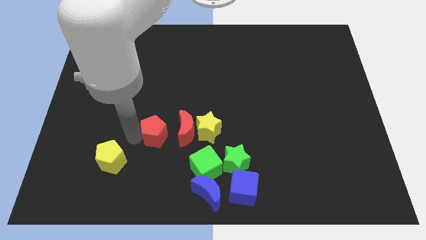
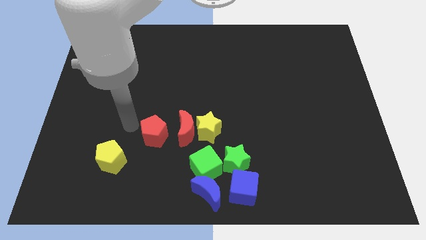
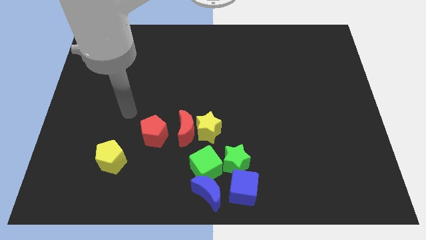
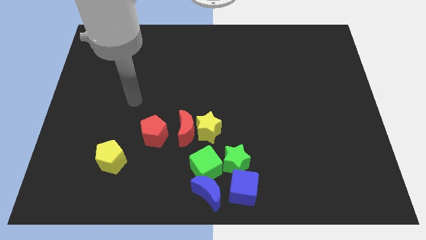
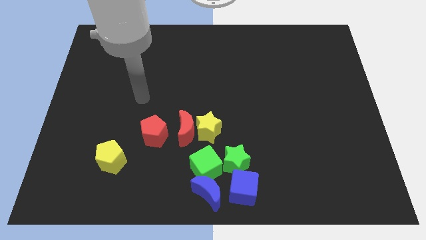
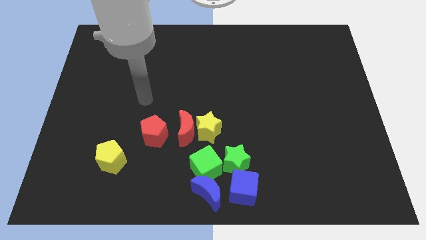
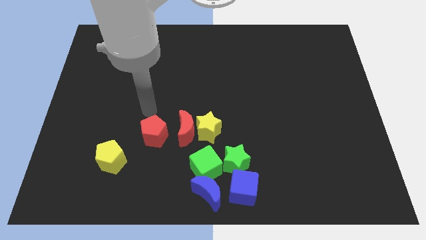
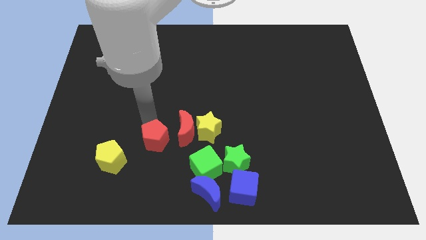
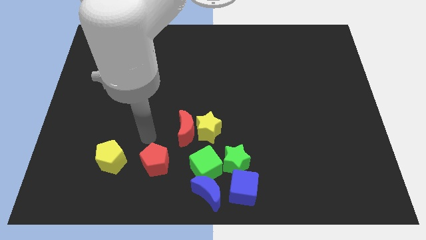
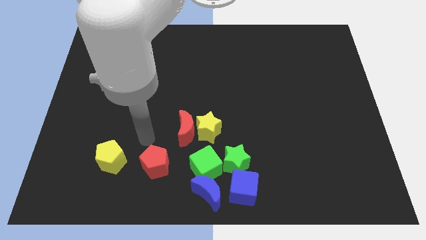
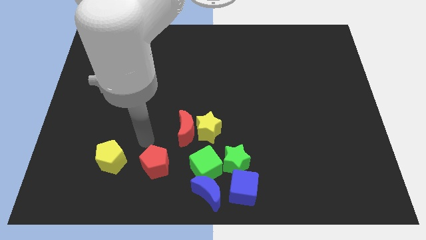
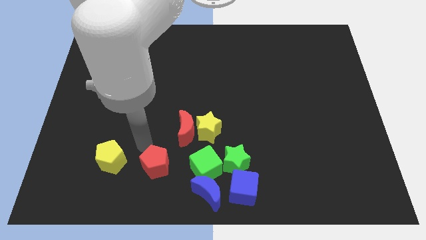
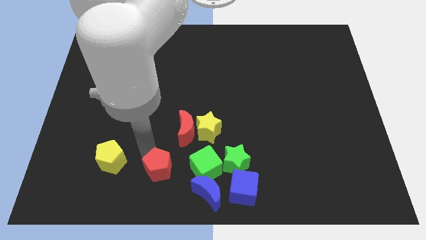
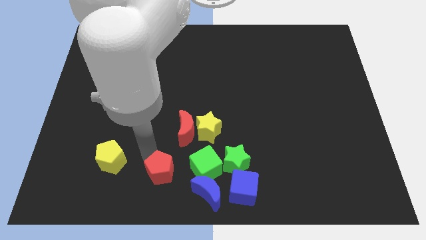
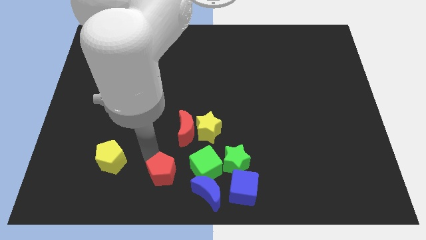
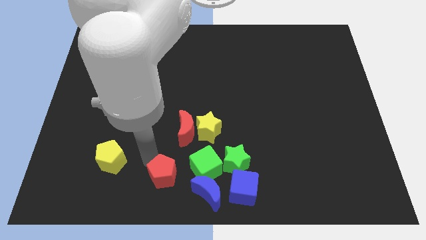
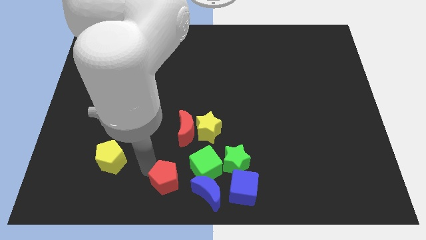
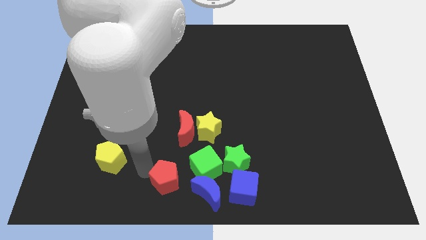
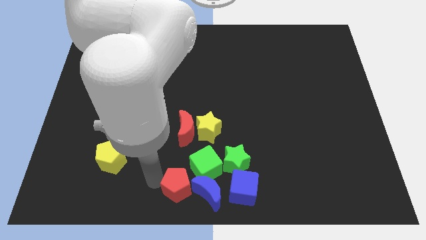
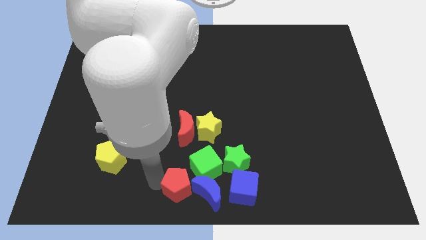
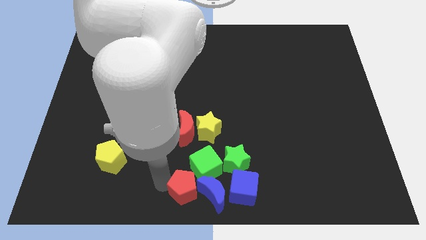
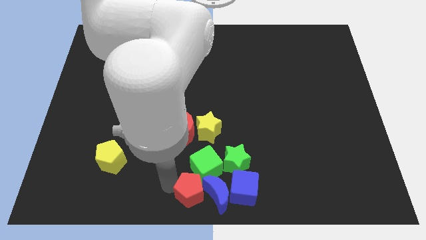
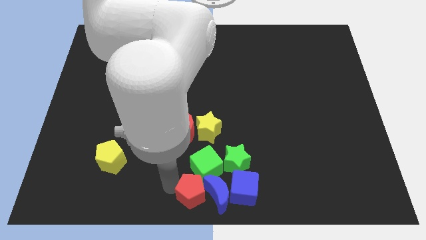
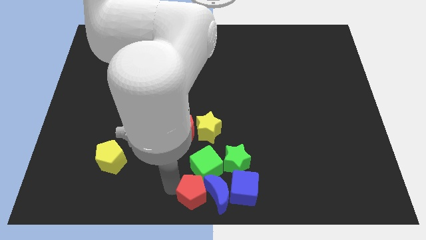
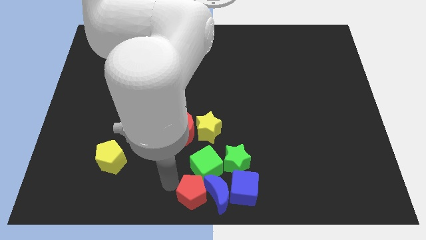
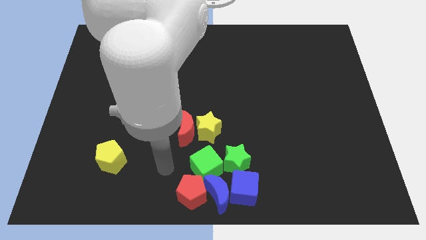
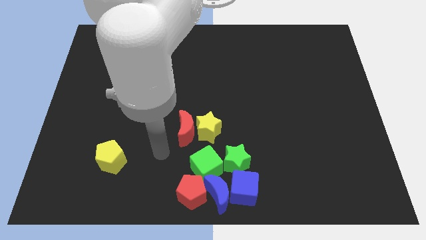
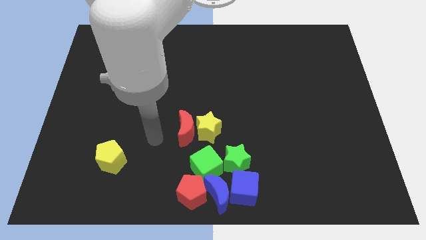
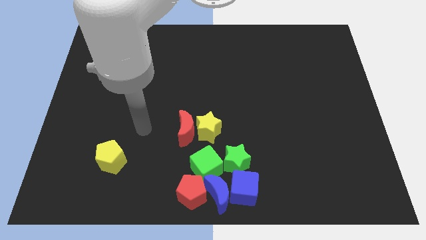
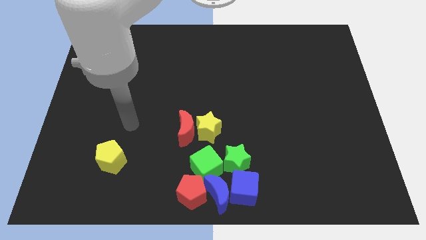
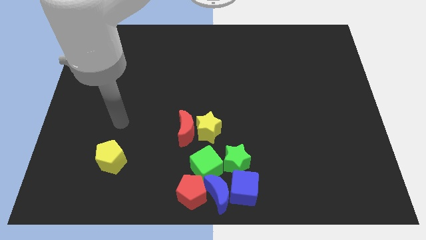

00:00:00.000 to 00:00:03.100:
push the red pentagon into the blue crescent

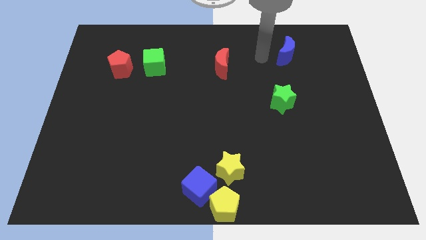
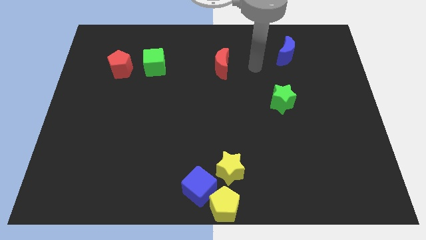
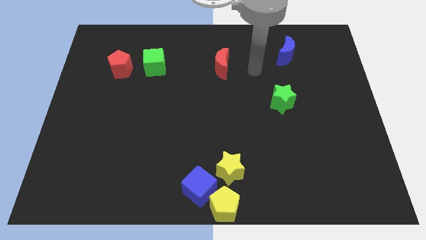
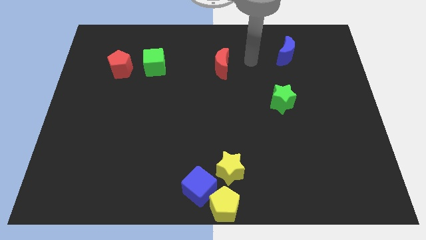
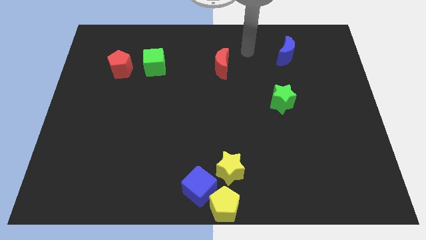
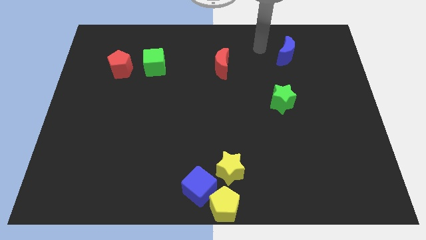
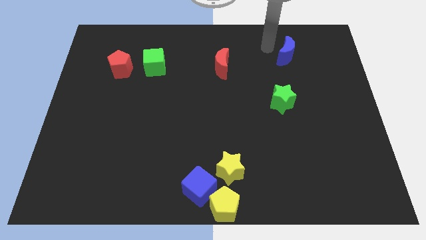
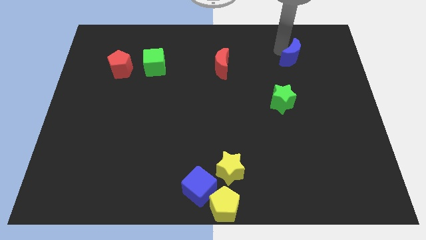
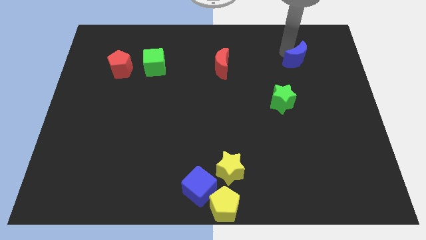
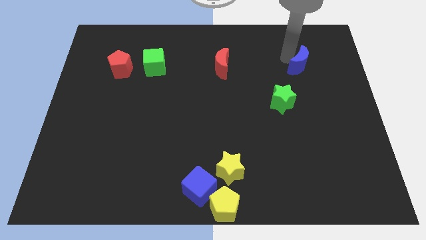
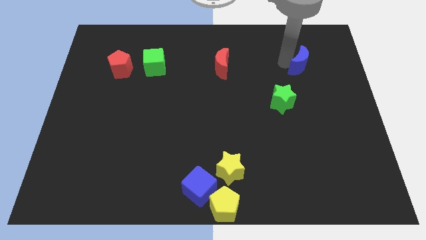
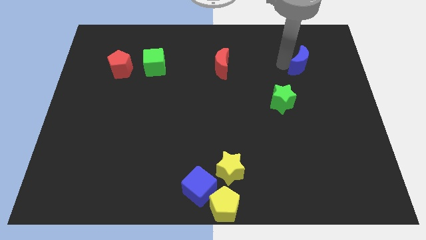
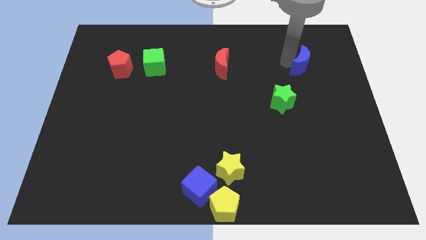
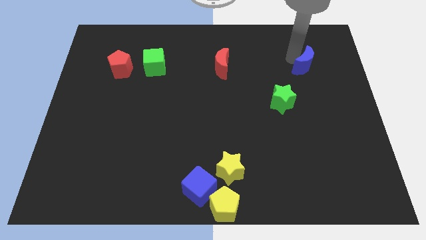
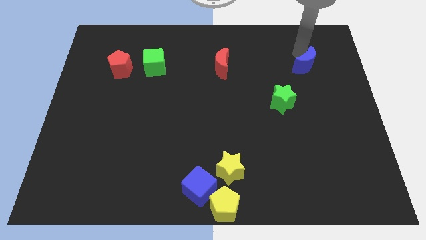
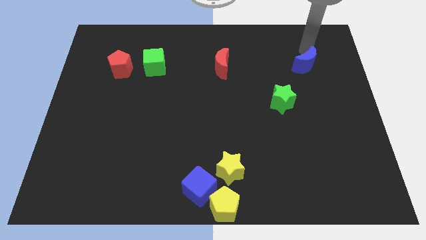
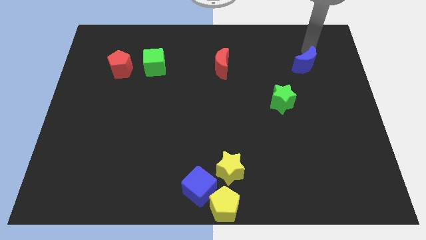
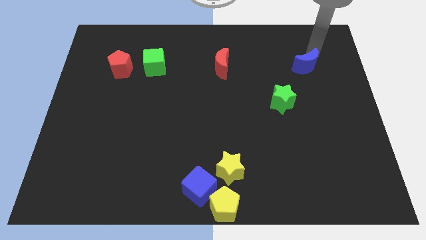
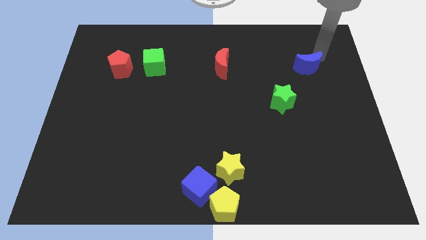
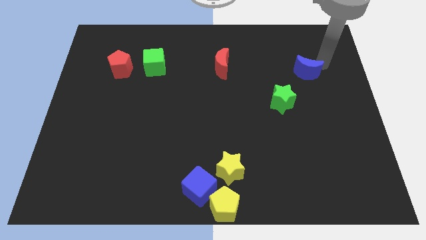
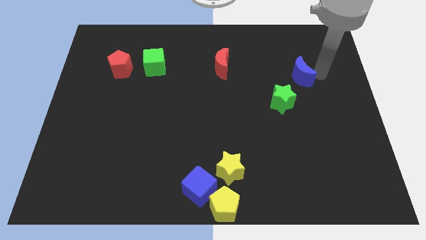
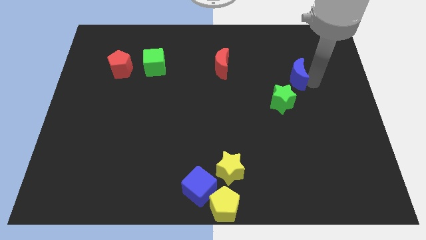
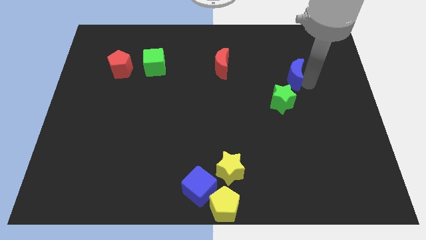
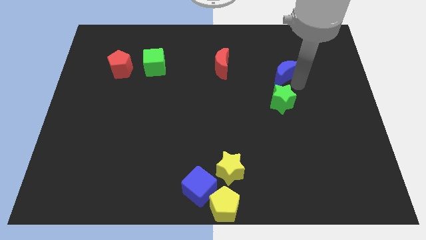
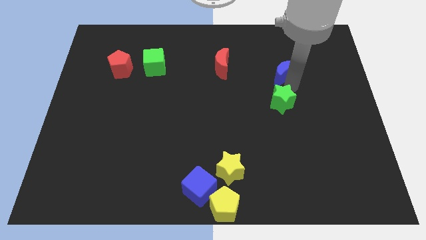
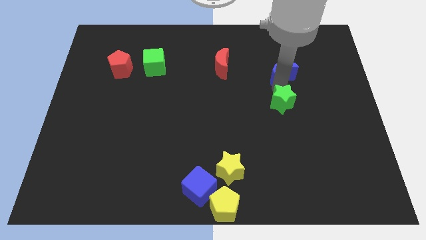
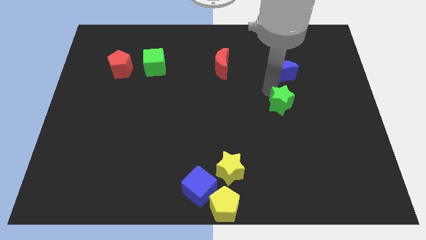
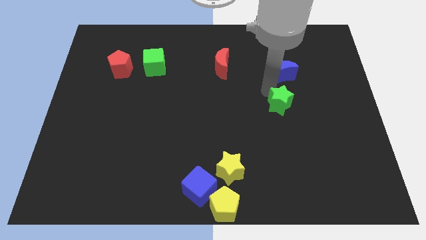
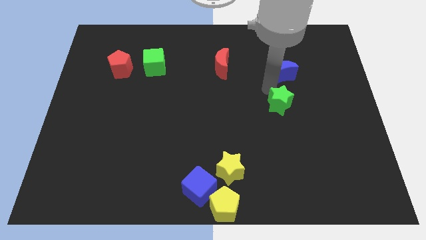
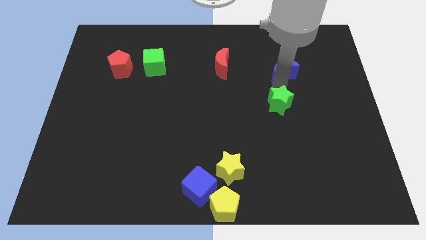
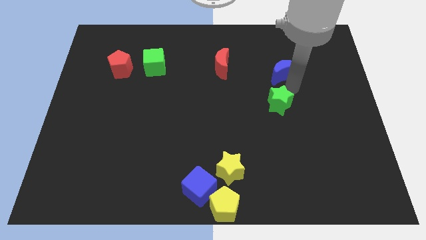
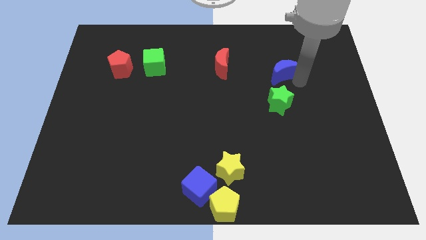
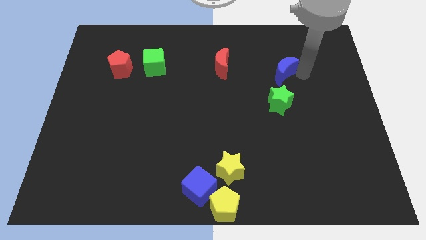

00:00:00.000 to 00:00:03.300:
drag the blue moon towards the green star

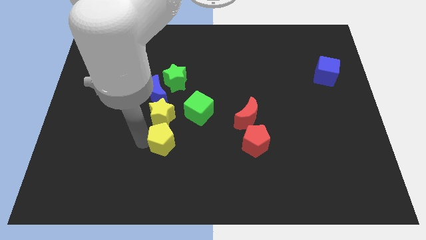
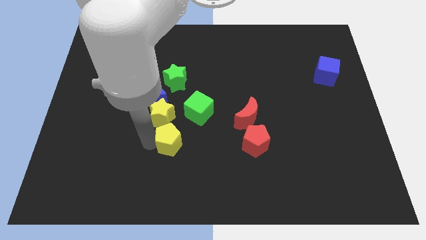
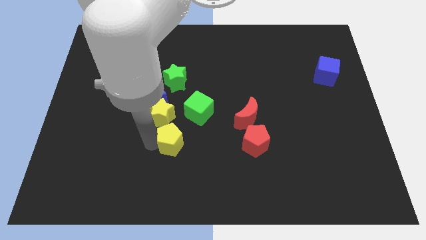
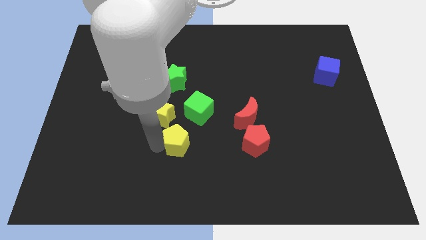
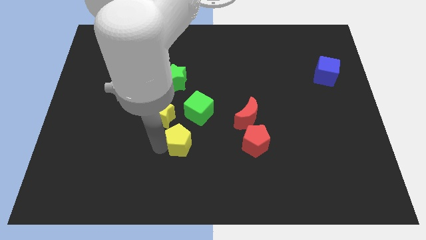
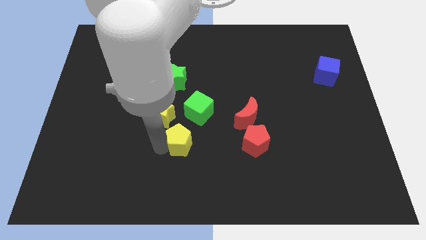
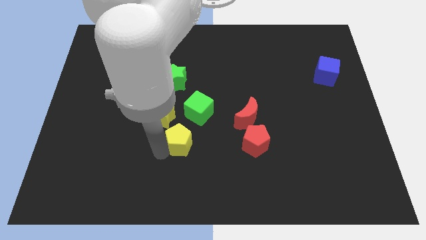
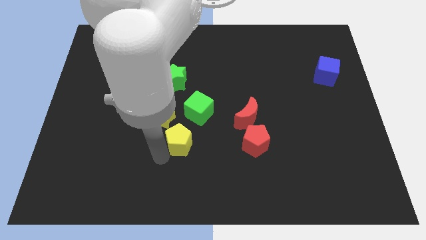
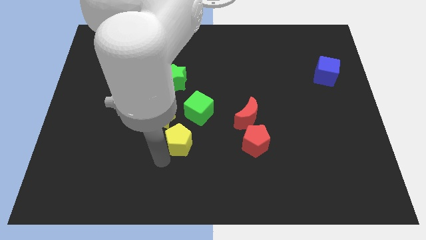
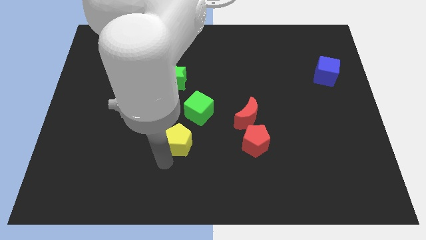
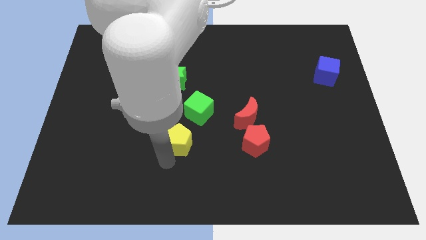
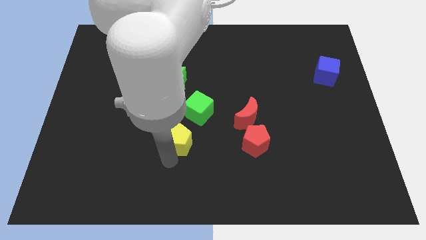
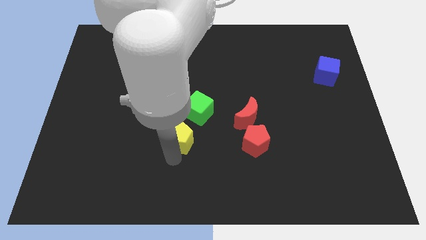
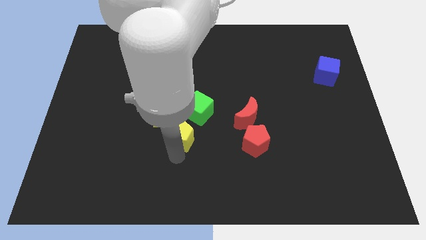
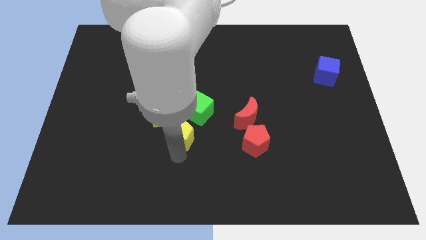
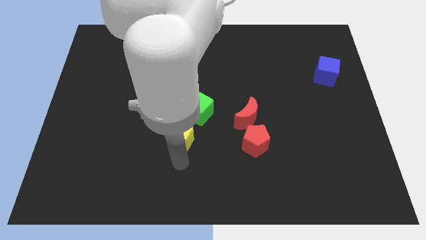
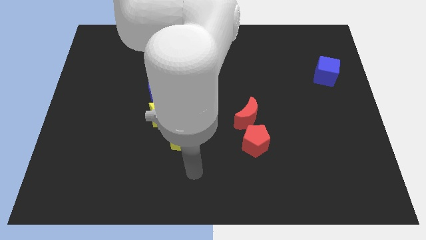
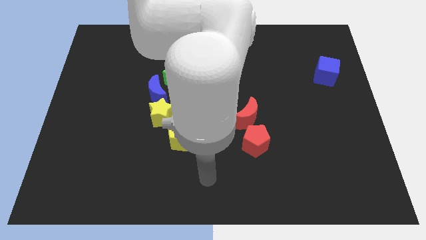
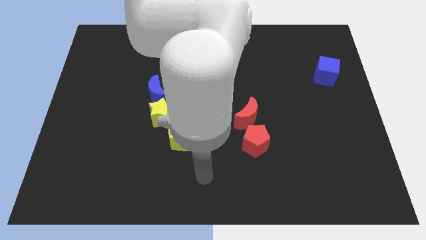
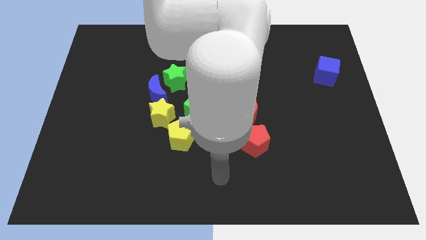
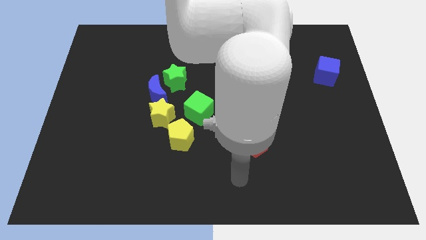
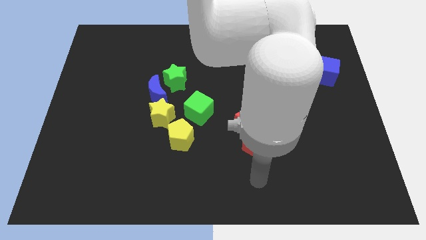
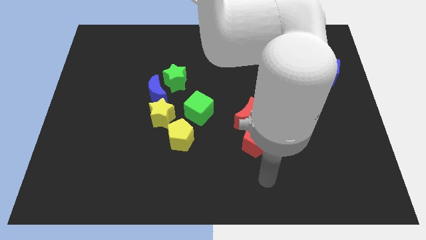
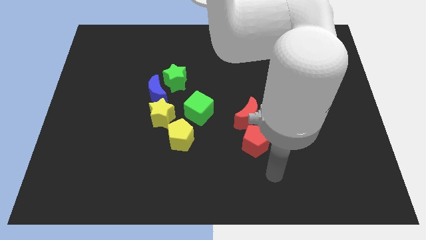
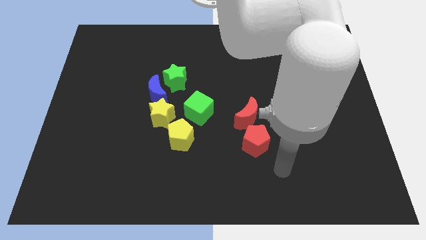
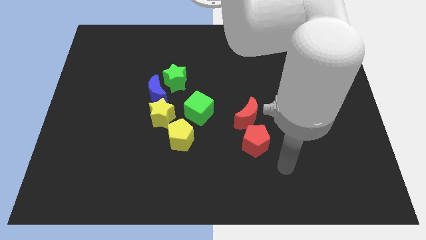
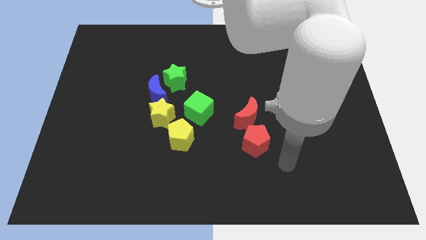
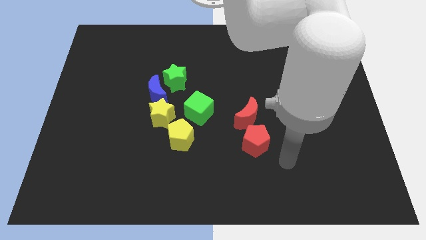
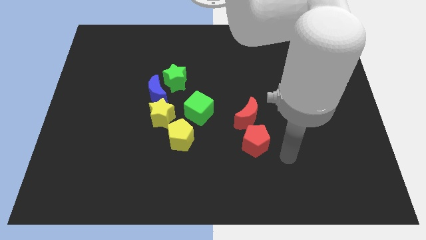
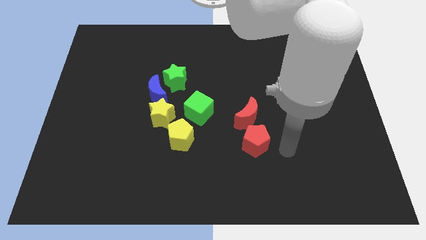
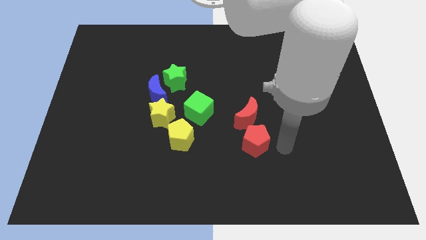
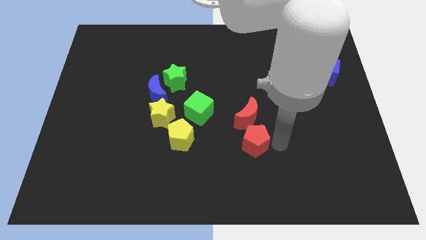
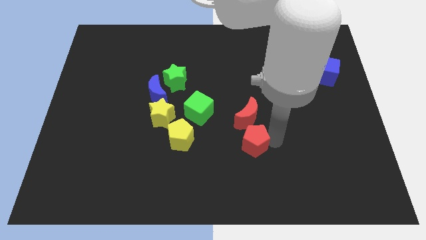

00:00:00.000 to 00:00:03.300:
push the yellow pentagon slightly to the right
